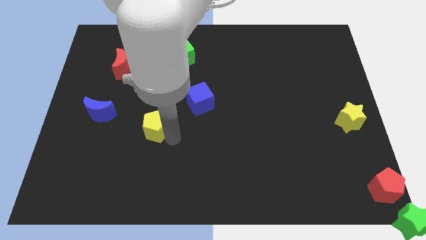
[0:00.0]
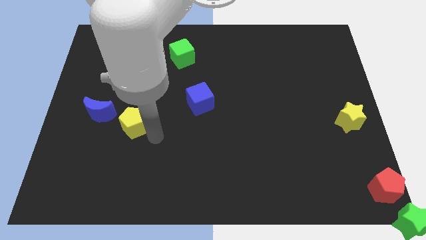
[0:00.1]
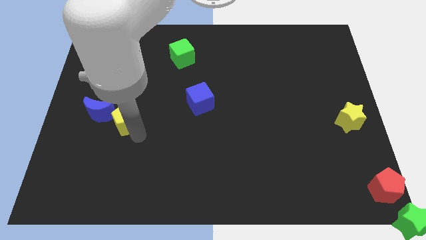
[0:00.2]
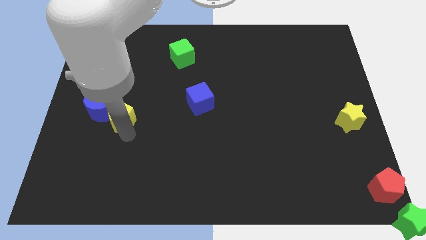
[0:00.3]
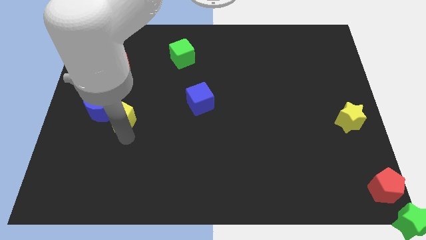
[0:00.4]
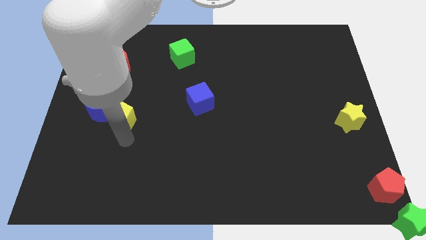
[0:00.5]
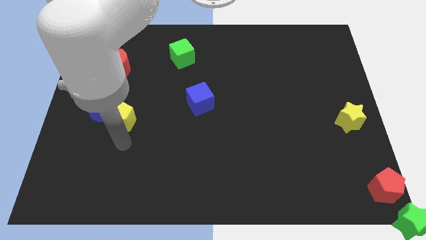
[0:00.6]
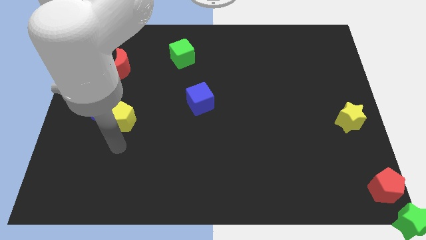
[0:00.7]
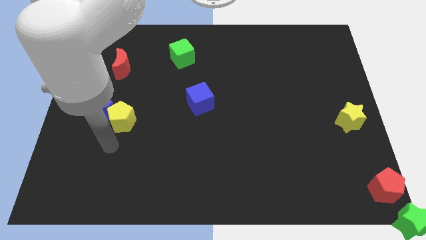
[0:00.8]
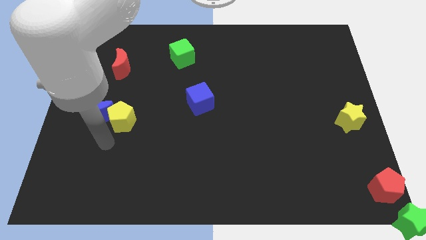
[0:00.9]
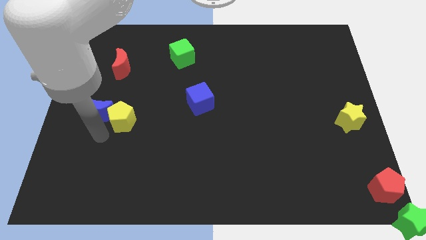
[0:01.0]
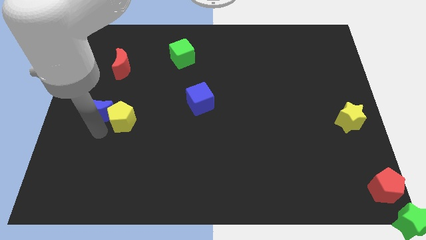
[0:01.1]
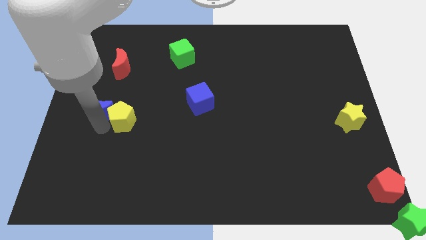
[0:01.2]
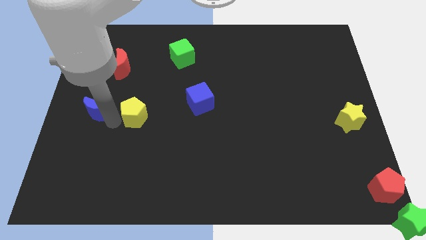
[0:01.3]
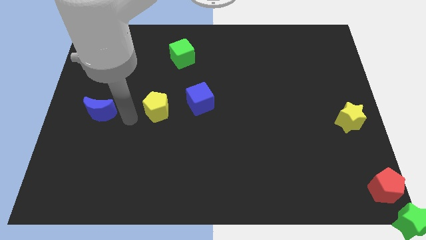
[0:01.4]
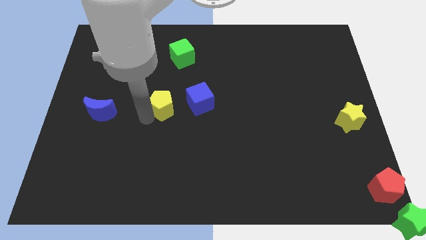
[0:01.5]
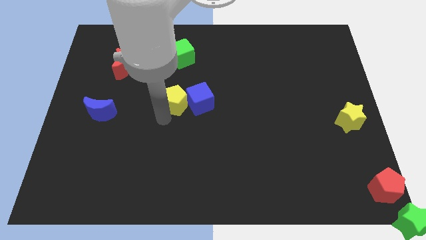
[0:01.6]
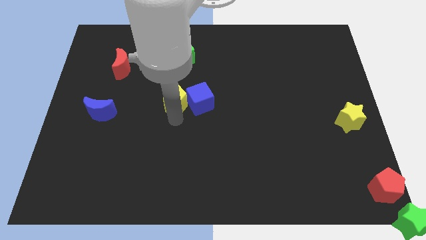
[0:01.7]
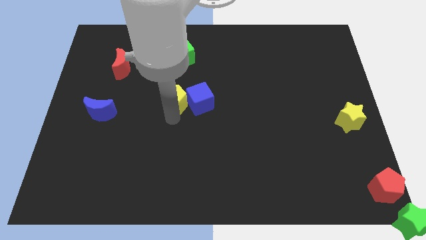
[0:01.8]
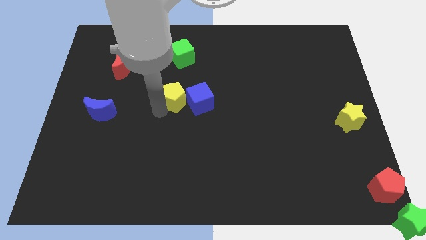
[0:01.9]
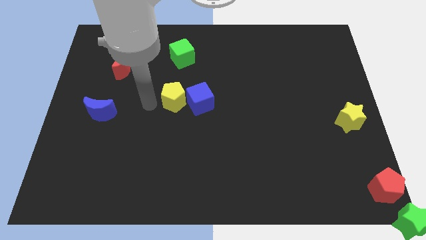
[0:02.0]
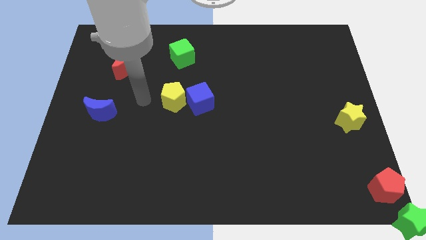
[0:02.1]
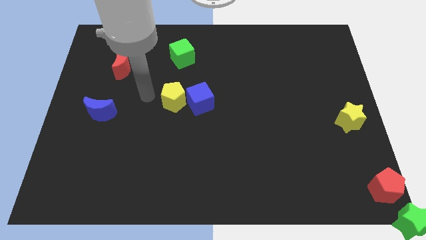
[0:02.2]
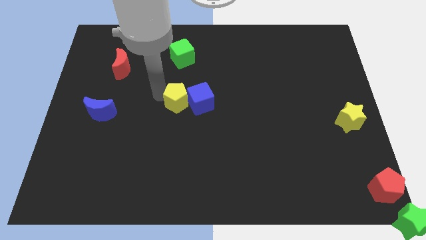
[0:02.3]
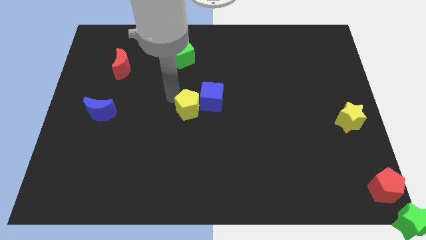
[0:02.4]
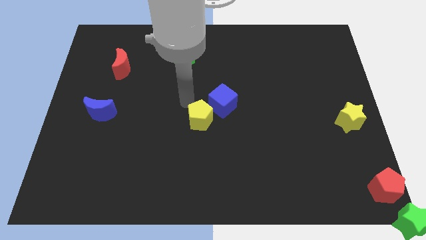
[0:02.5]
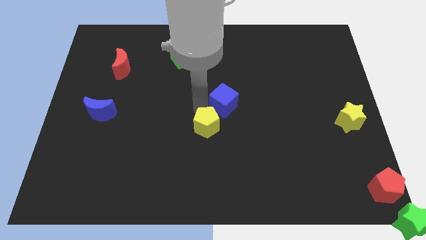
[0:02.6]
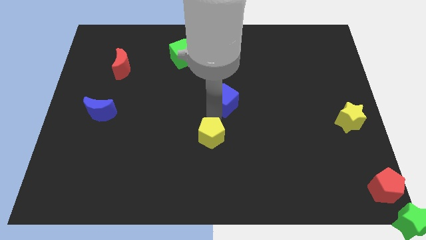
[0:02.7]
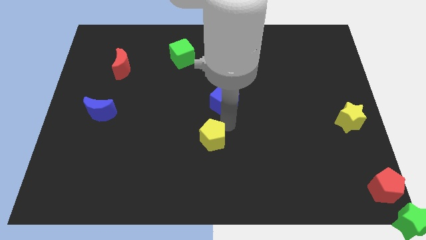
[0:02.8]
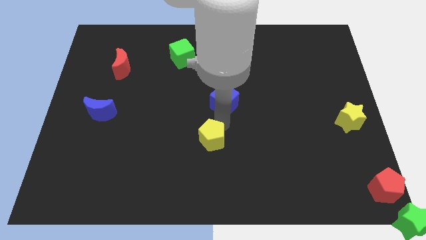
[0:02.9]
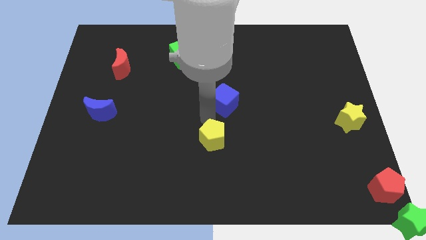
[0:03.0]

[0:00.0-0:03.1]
place the yellow pentagon to the center of the board

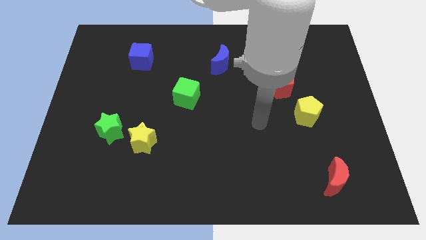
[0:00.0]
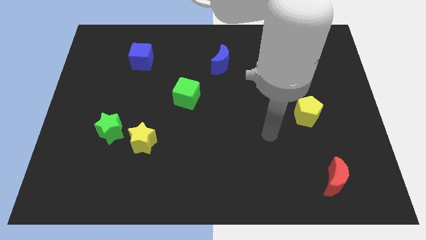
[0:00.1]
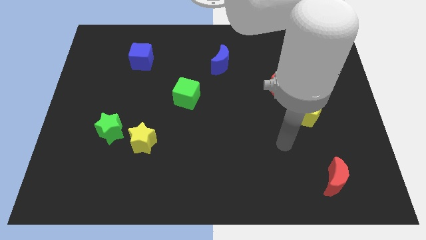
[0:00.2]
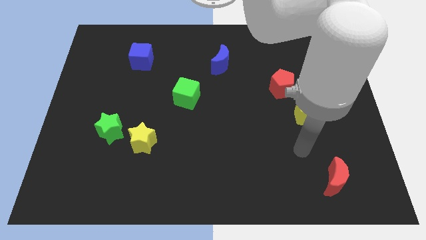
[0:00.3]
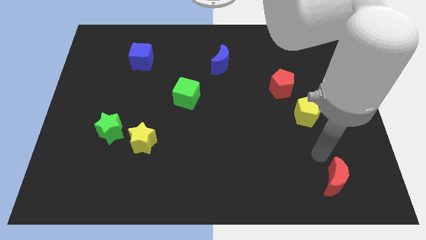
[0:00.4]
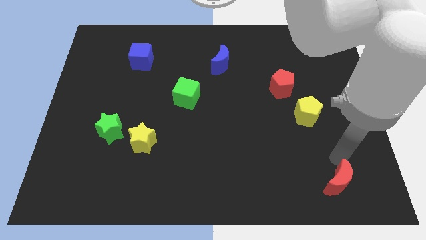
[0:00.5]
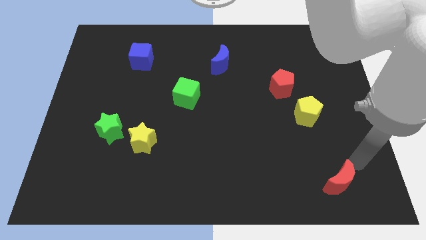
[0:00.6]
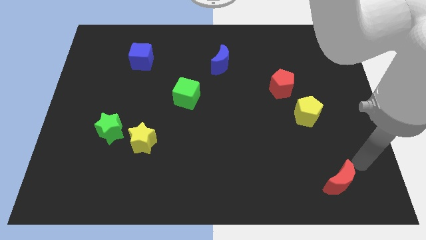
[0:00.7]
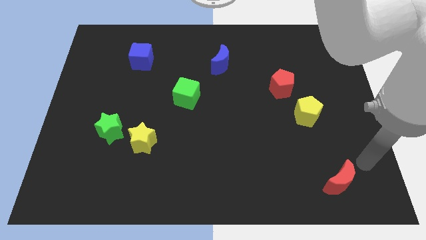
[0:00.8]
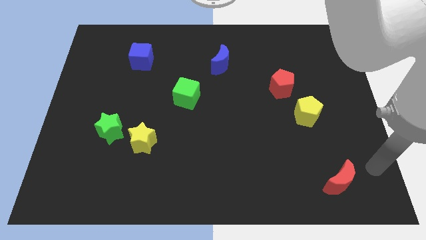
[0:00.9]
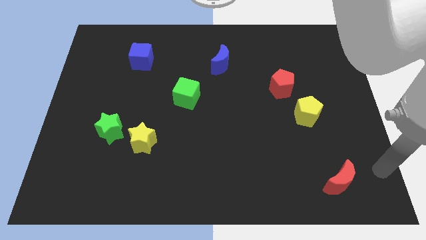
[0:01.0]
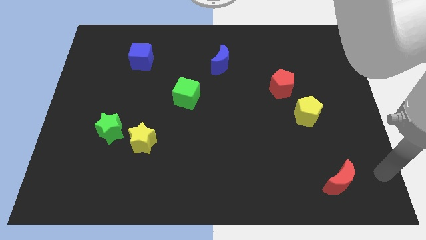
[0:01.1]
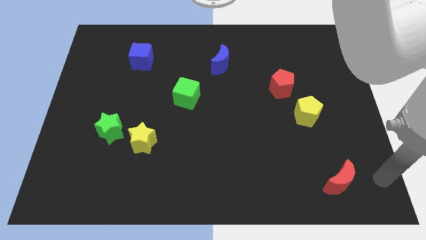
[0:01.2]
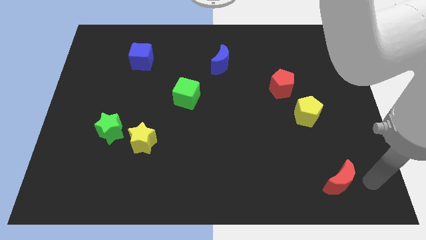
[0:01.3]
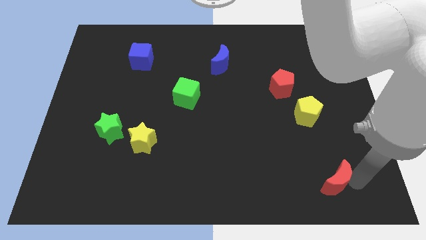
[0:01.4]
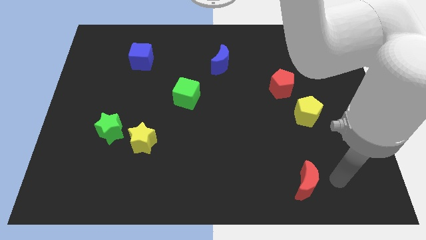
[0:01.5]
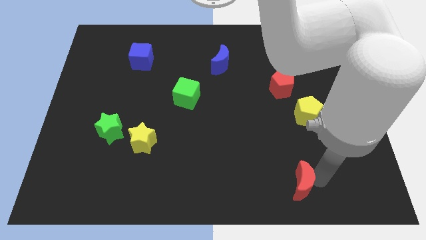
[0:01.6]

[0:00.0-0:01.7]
move red crescent below the yellow pentagon

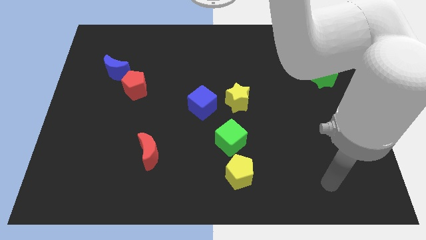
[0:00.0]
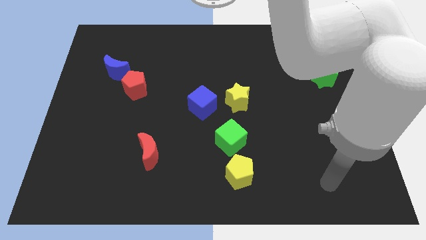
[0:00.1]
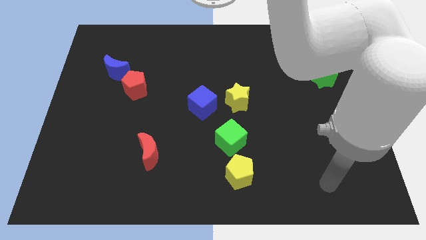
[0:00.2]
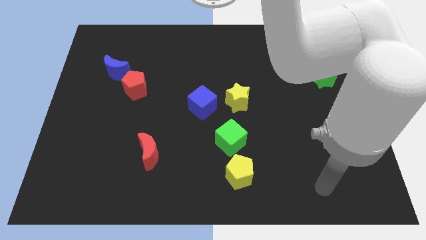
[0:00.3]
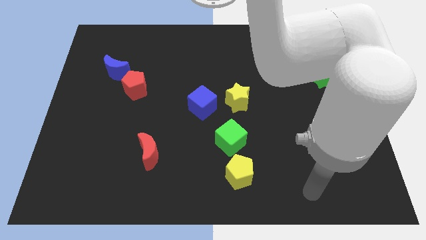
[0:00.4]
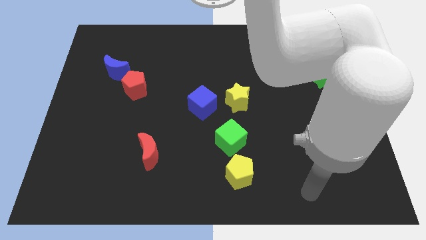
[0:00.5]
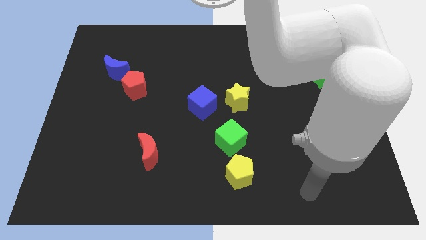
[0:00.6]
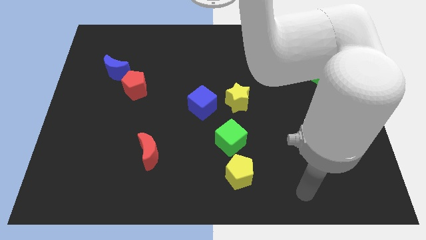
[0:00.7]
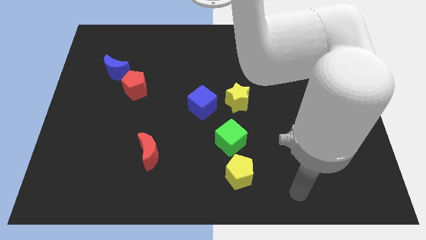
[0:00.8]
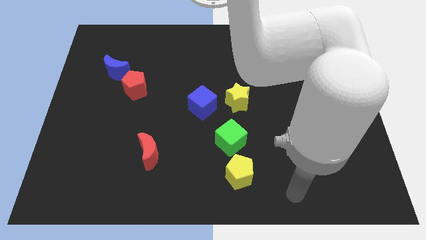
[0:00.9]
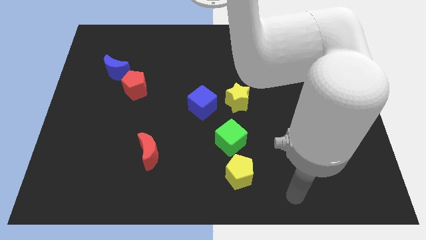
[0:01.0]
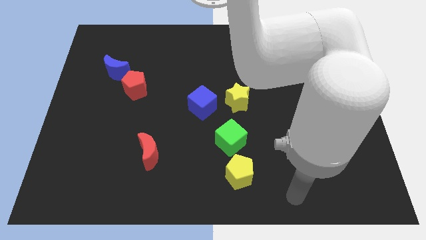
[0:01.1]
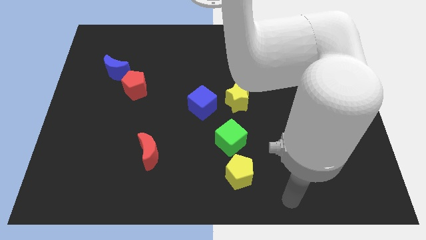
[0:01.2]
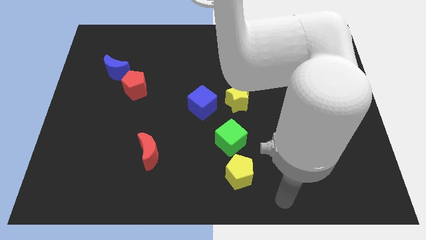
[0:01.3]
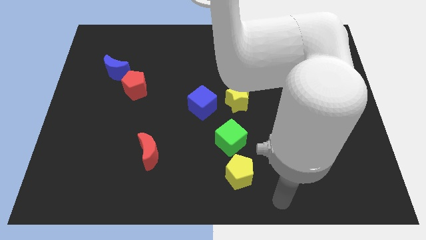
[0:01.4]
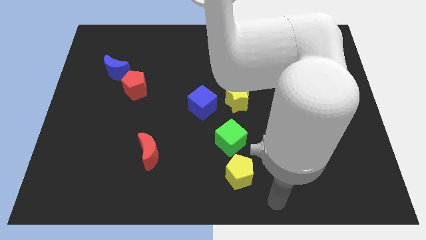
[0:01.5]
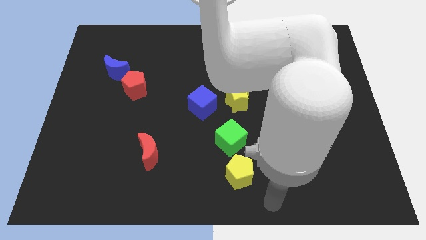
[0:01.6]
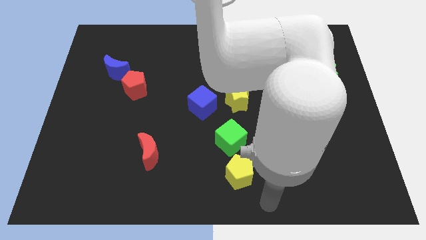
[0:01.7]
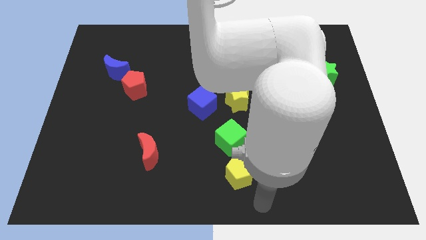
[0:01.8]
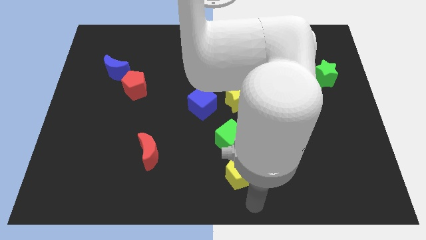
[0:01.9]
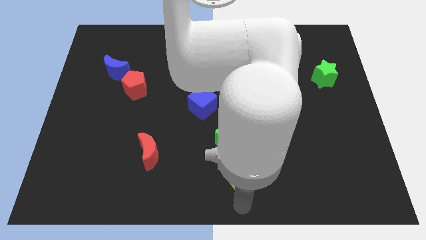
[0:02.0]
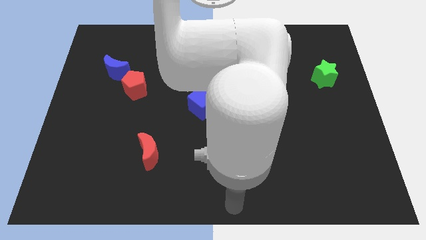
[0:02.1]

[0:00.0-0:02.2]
move your arm to the bottom of the yellow pentagon

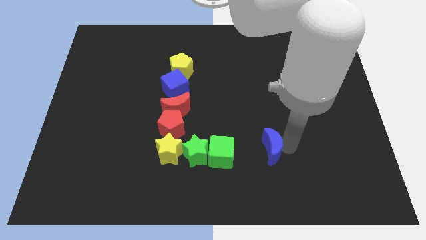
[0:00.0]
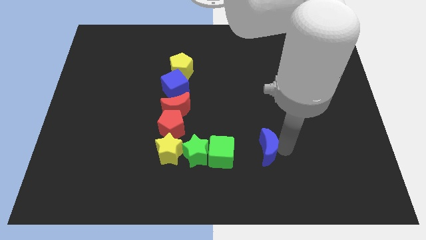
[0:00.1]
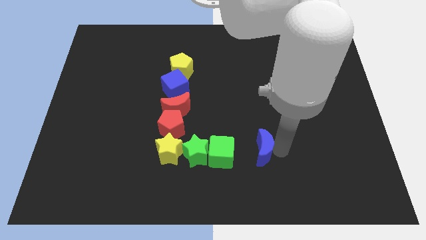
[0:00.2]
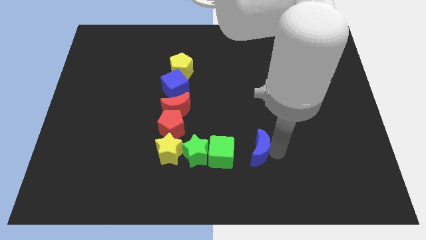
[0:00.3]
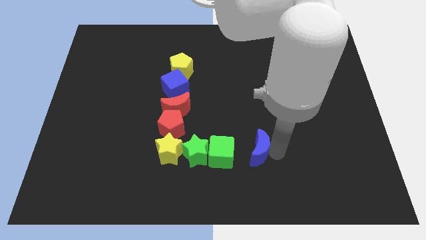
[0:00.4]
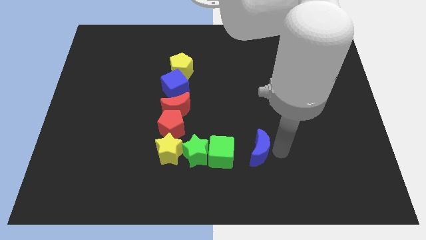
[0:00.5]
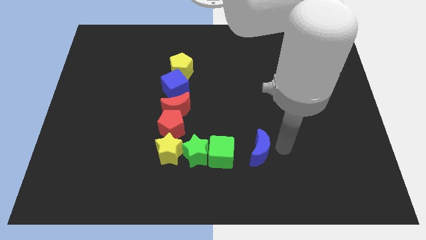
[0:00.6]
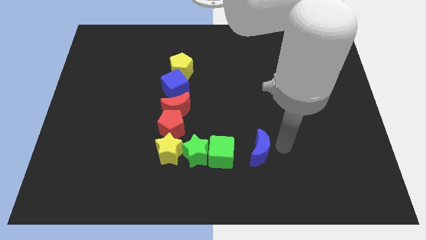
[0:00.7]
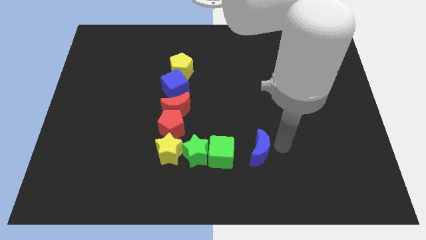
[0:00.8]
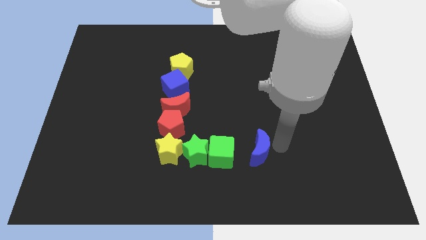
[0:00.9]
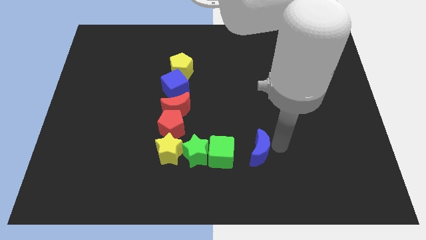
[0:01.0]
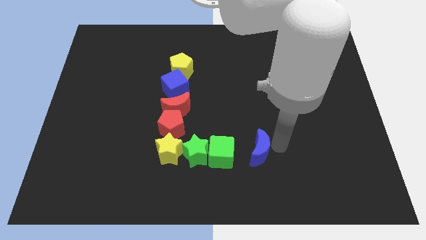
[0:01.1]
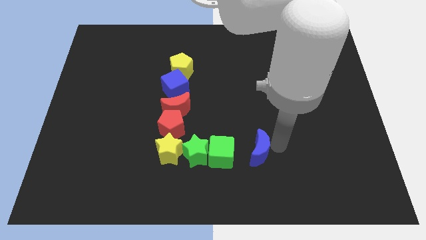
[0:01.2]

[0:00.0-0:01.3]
push the blue crescent to the right of the green cube

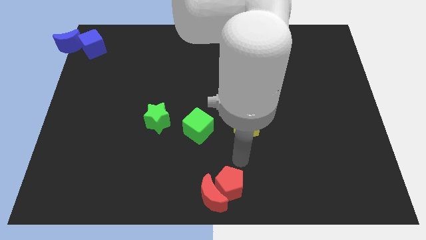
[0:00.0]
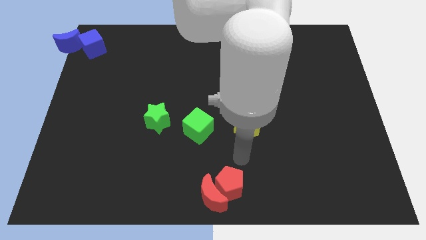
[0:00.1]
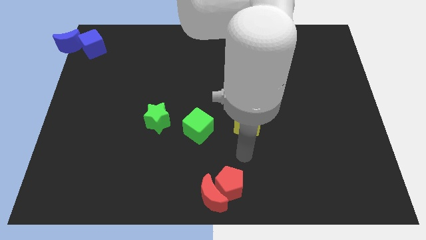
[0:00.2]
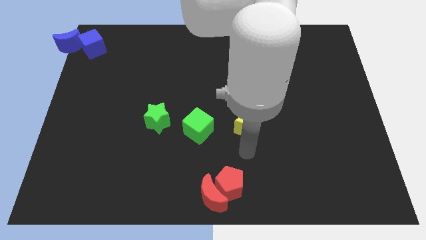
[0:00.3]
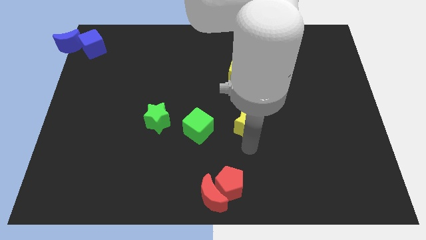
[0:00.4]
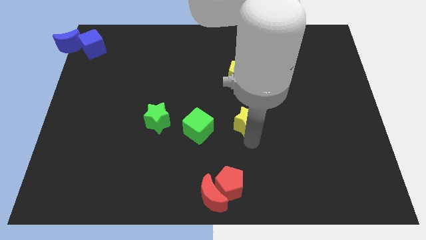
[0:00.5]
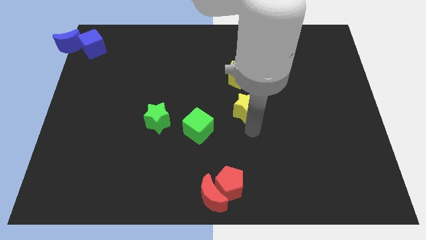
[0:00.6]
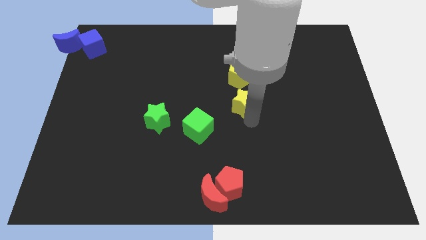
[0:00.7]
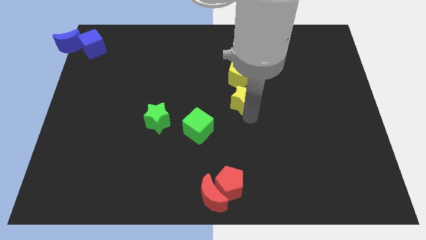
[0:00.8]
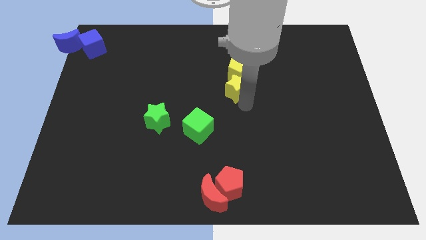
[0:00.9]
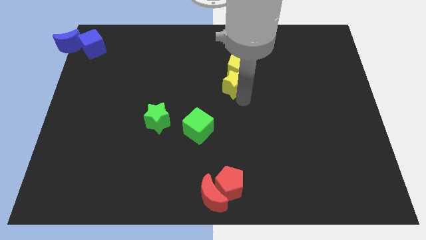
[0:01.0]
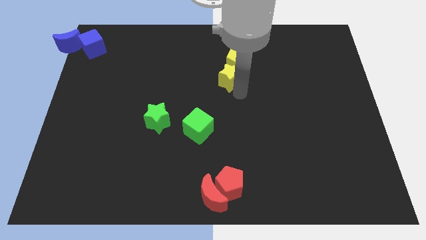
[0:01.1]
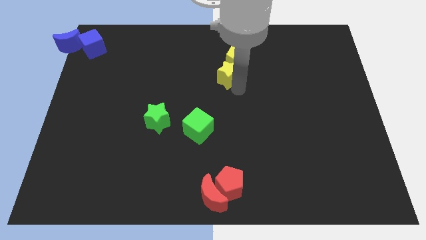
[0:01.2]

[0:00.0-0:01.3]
move the yellow star into the yellow pentagon
